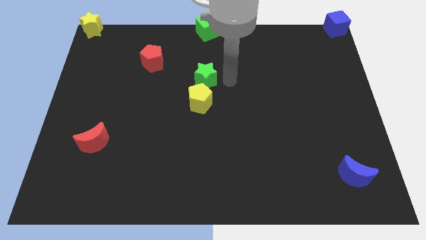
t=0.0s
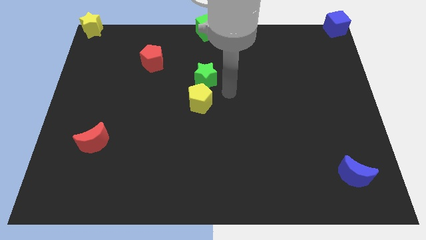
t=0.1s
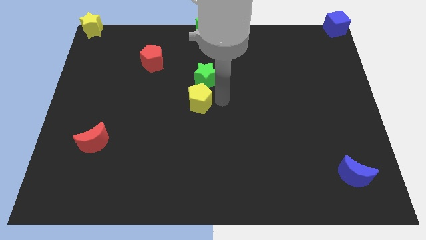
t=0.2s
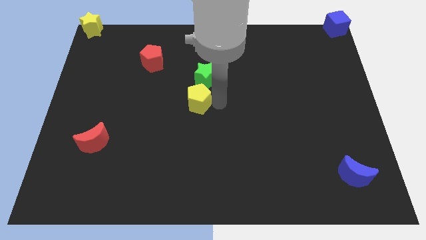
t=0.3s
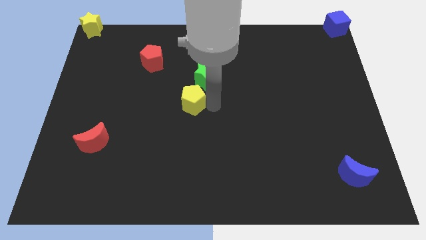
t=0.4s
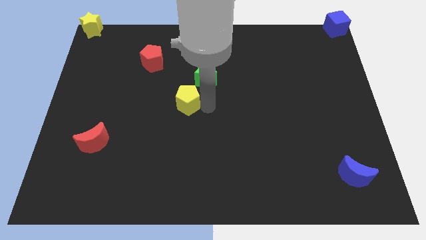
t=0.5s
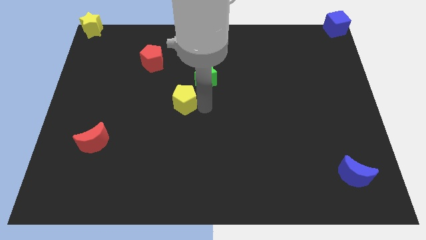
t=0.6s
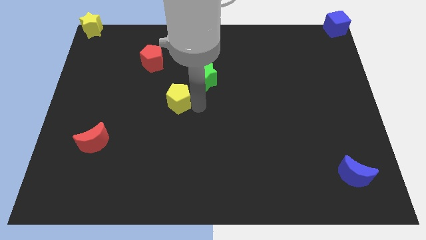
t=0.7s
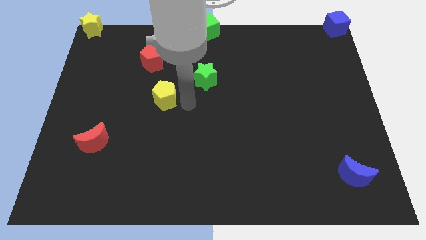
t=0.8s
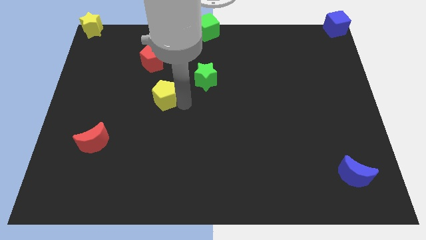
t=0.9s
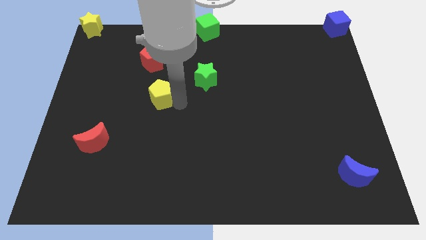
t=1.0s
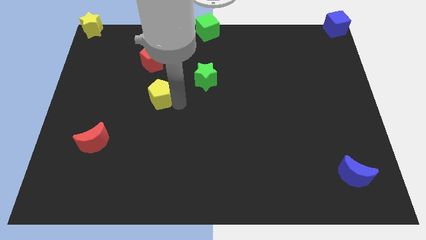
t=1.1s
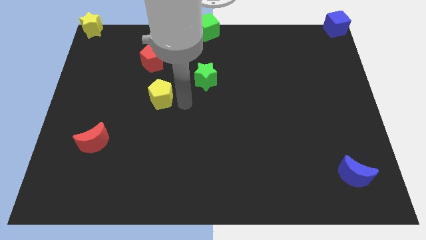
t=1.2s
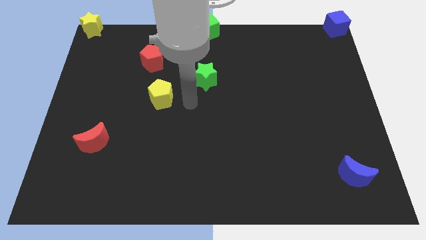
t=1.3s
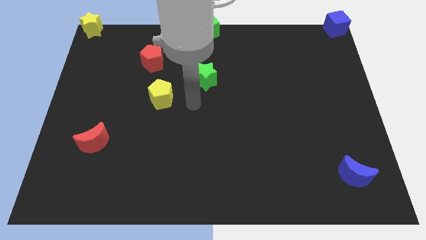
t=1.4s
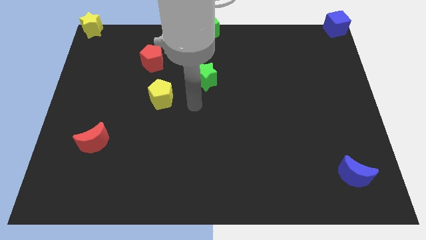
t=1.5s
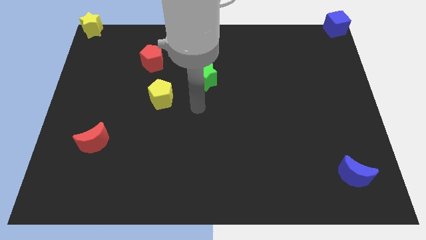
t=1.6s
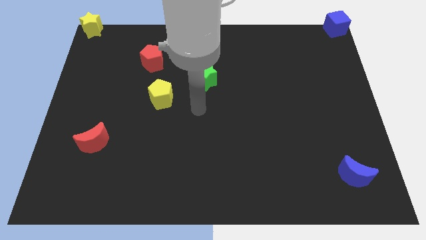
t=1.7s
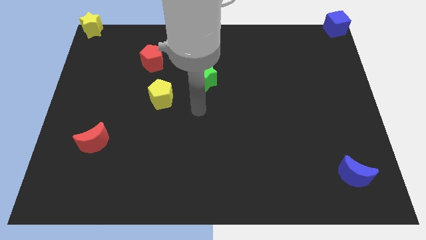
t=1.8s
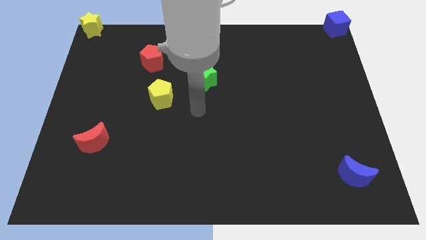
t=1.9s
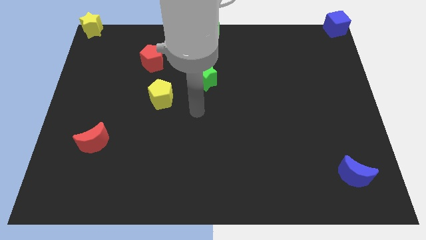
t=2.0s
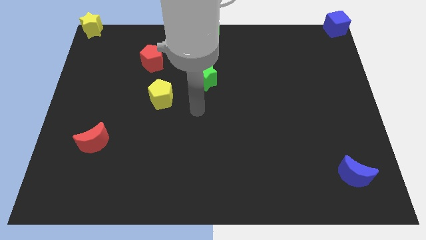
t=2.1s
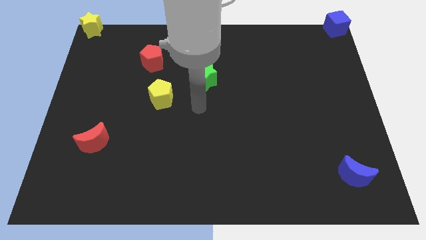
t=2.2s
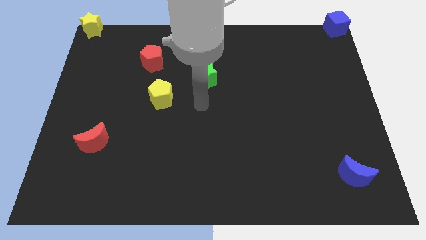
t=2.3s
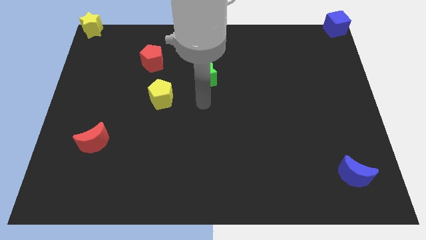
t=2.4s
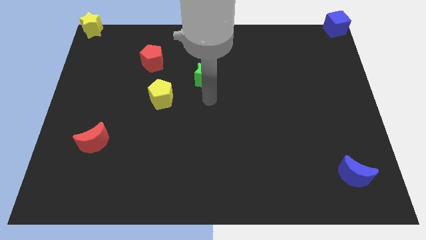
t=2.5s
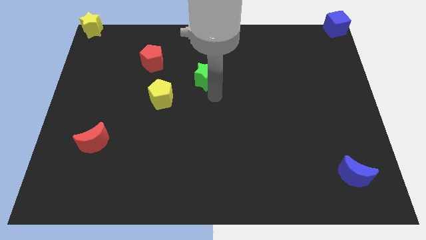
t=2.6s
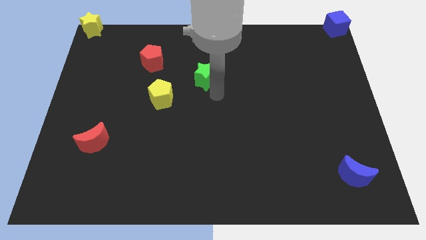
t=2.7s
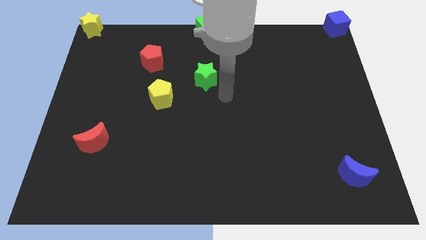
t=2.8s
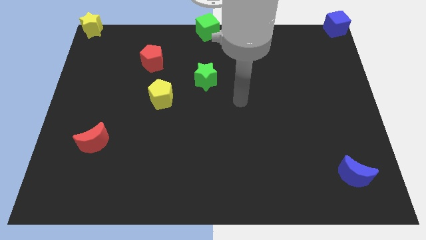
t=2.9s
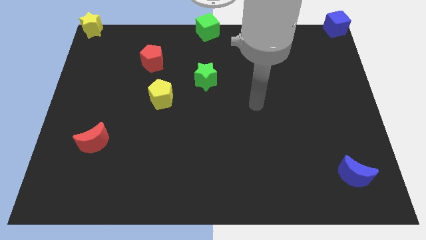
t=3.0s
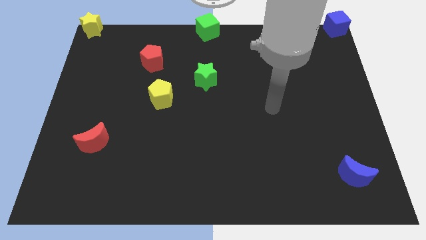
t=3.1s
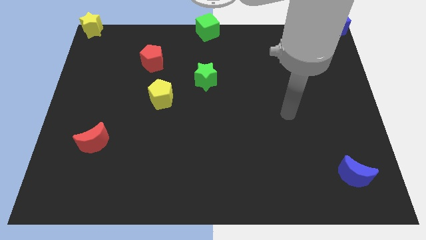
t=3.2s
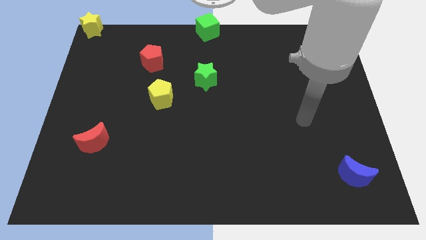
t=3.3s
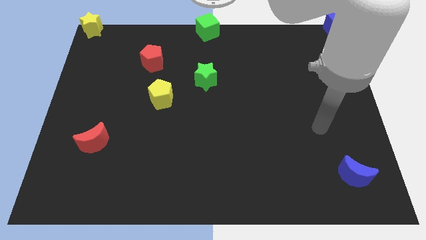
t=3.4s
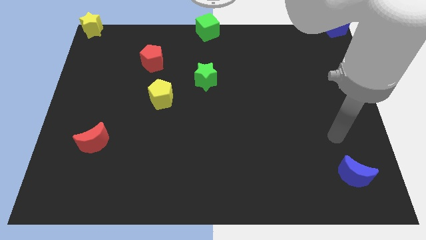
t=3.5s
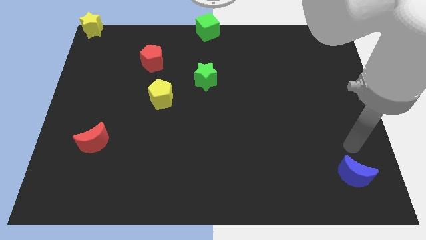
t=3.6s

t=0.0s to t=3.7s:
push the yellow pentagon left side of the board slightly

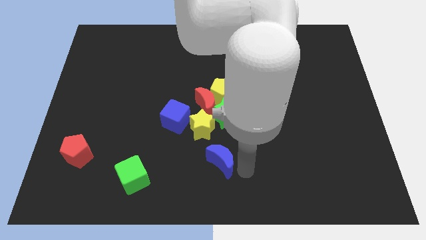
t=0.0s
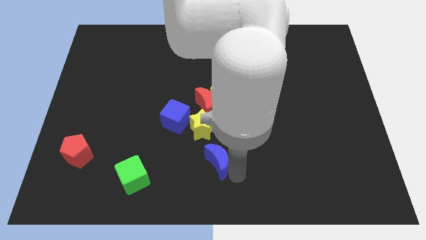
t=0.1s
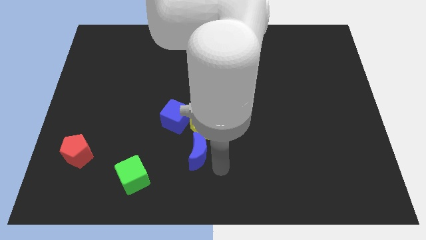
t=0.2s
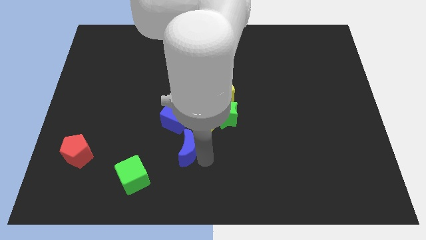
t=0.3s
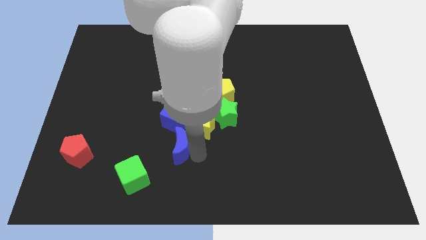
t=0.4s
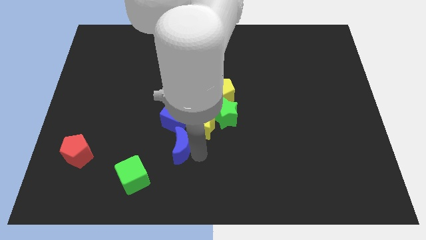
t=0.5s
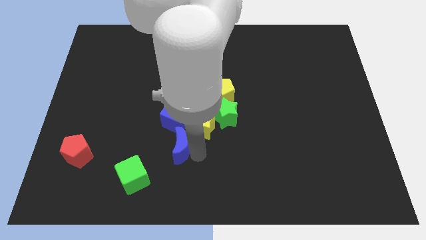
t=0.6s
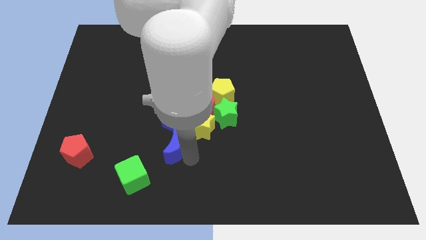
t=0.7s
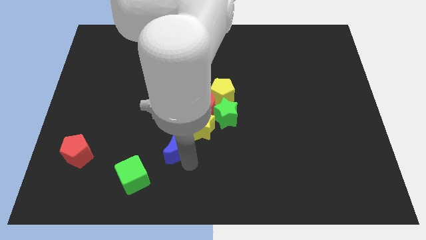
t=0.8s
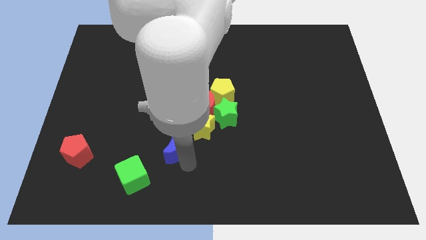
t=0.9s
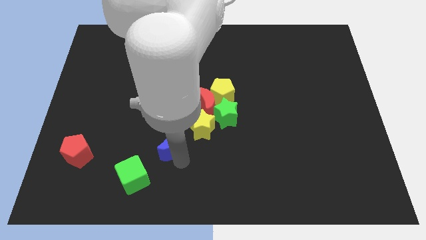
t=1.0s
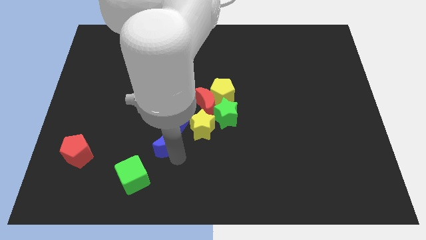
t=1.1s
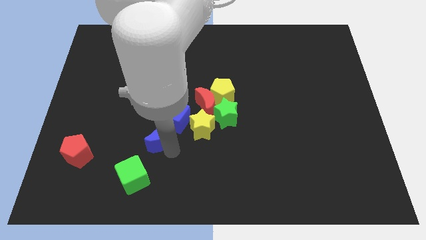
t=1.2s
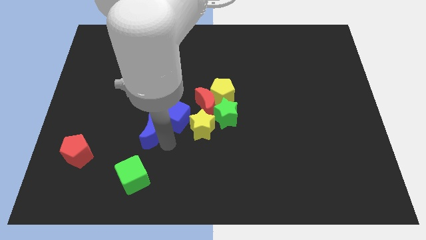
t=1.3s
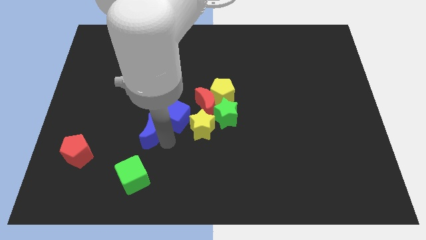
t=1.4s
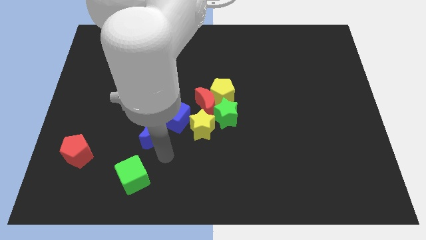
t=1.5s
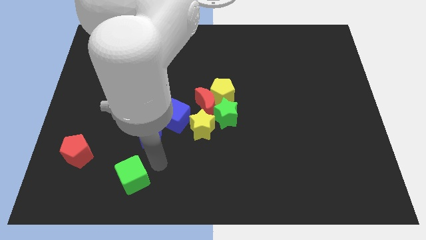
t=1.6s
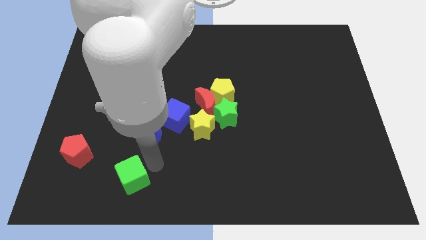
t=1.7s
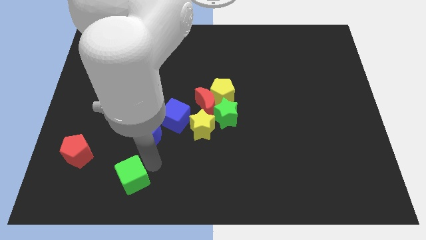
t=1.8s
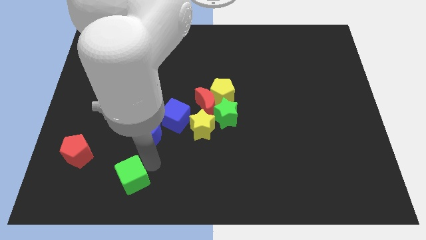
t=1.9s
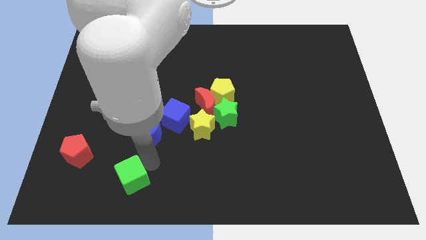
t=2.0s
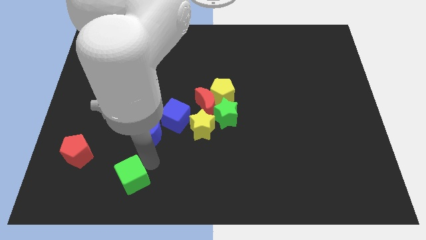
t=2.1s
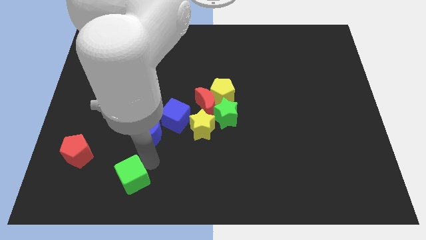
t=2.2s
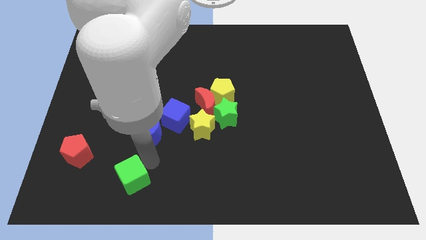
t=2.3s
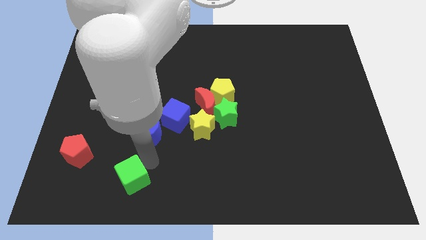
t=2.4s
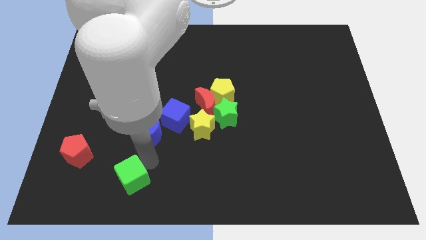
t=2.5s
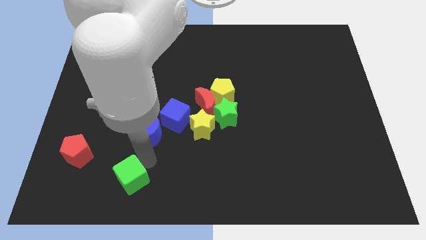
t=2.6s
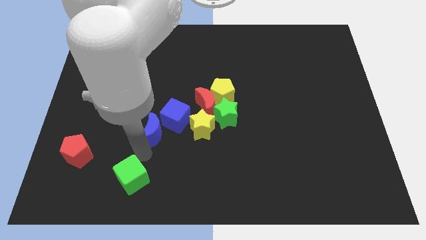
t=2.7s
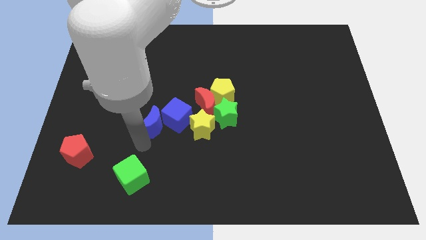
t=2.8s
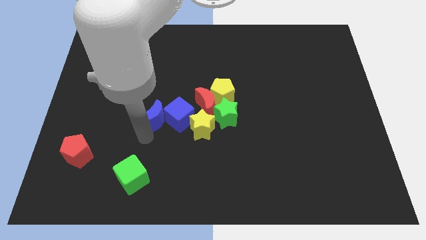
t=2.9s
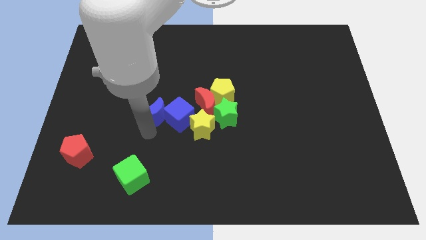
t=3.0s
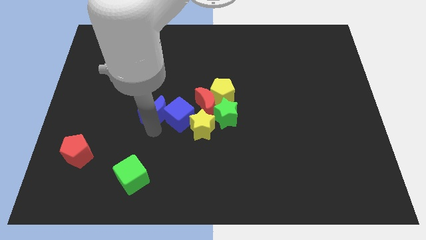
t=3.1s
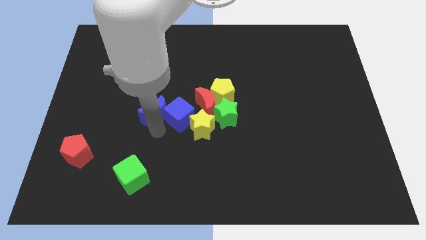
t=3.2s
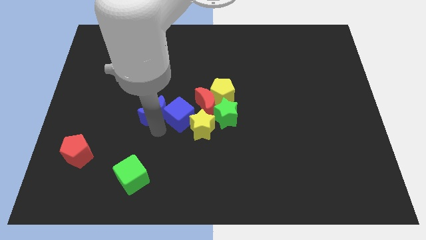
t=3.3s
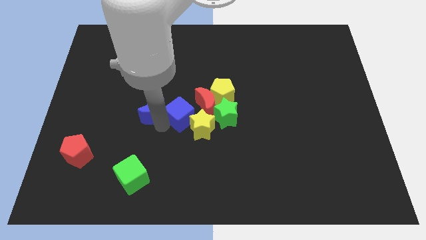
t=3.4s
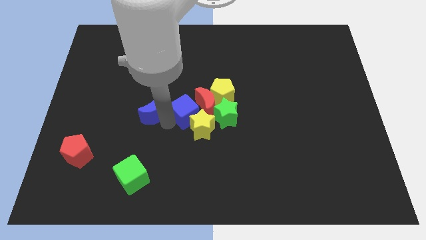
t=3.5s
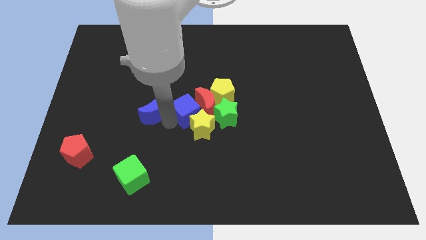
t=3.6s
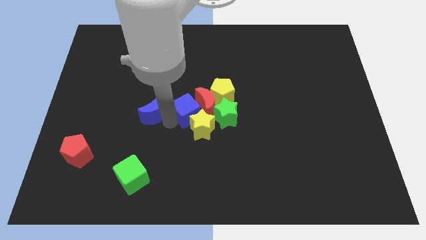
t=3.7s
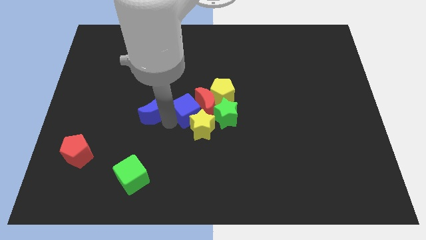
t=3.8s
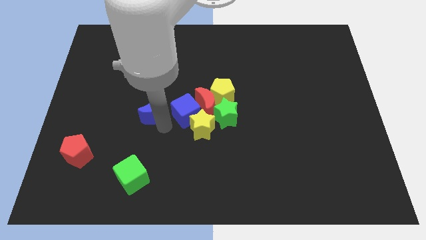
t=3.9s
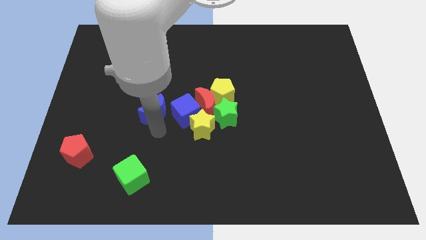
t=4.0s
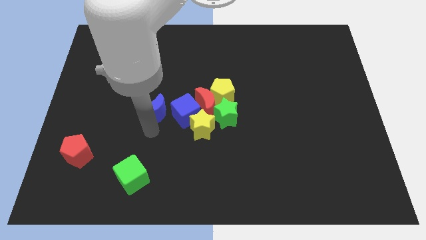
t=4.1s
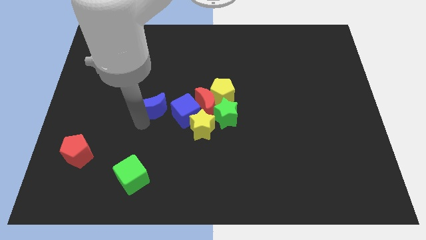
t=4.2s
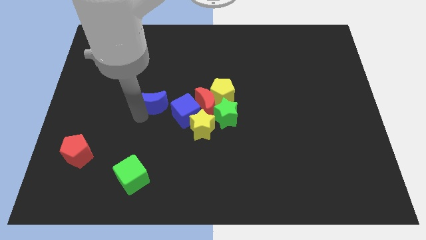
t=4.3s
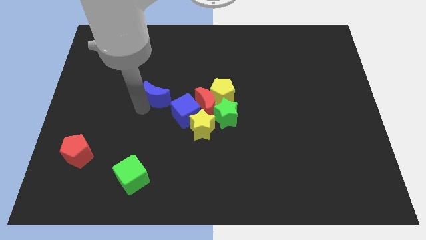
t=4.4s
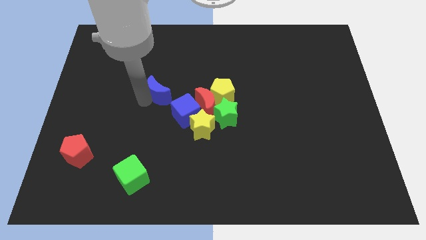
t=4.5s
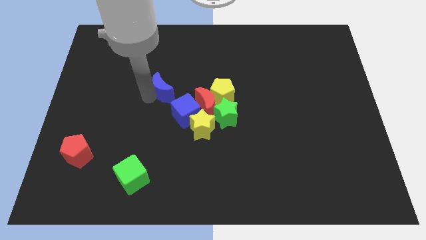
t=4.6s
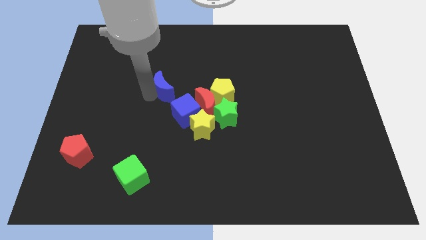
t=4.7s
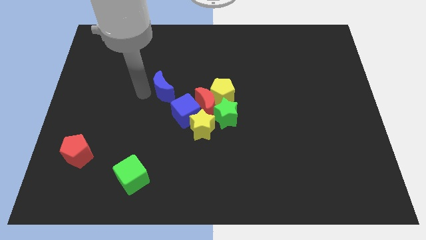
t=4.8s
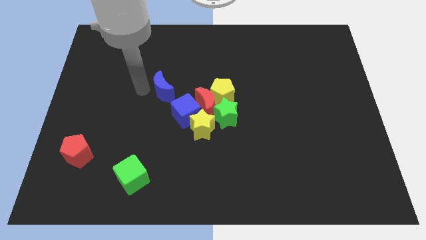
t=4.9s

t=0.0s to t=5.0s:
place the blue moon on the top of the blue cube

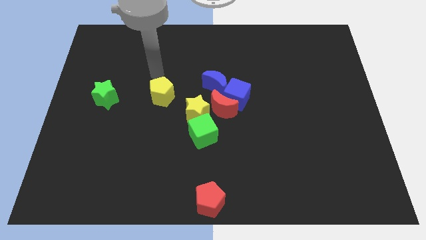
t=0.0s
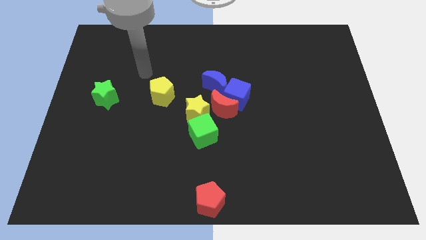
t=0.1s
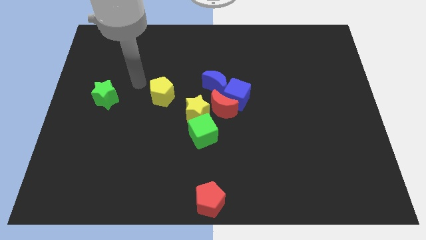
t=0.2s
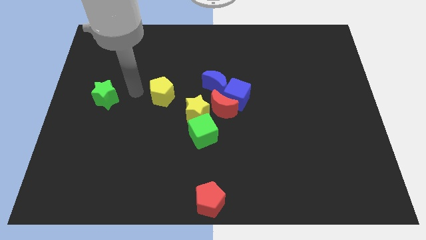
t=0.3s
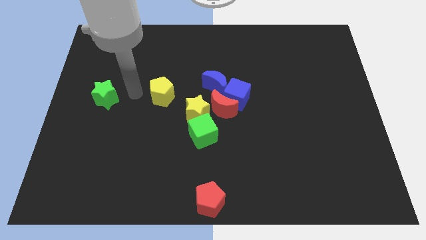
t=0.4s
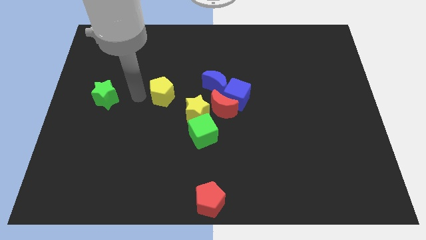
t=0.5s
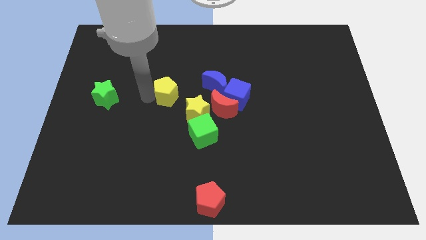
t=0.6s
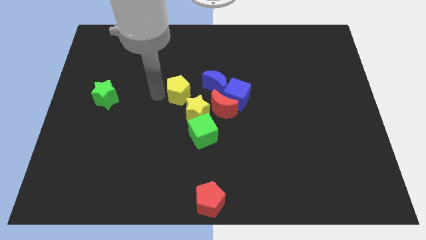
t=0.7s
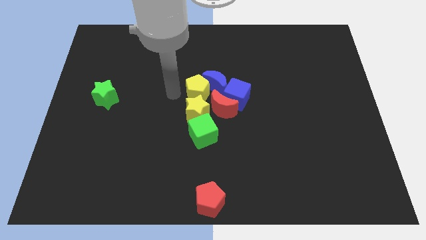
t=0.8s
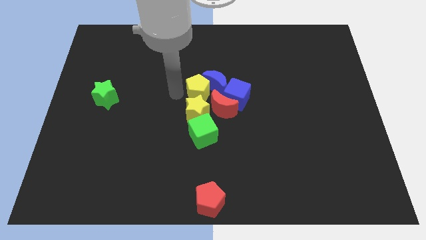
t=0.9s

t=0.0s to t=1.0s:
move the yellow pentagon vertically above the yellow star
